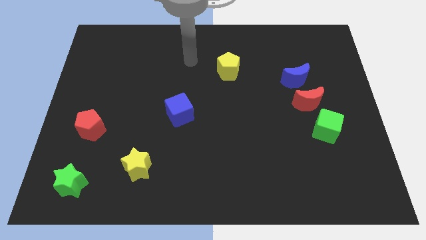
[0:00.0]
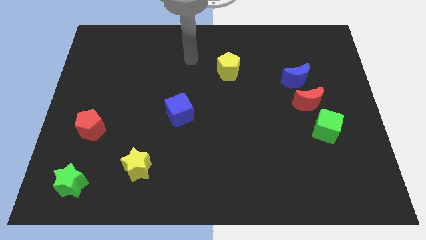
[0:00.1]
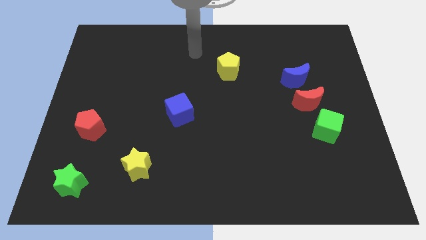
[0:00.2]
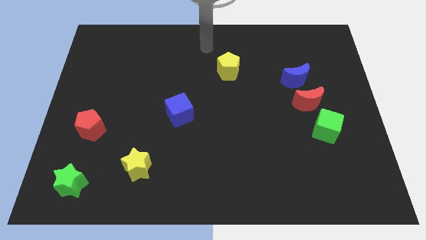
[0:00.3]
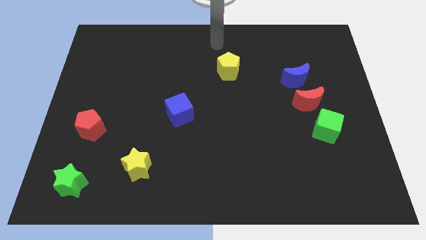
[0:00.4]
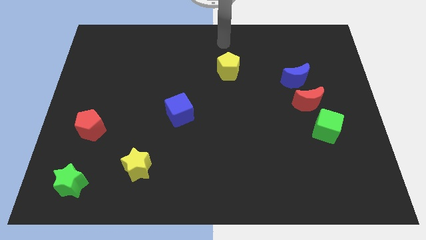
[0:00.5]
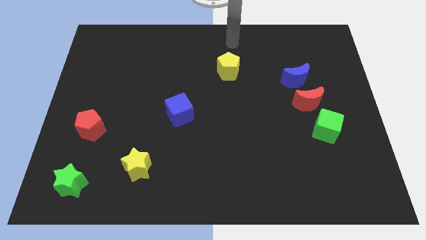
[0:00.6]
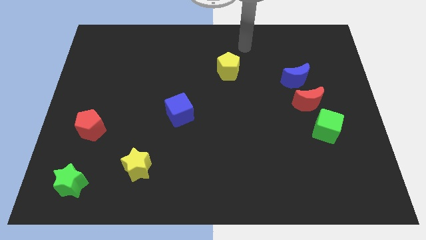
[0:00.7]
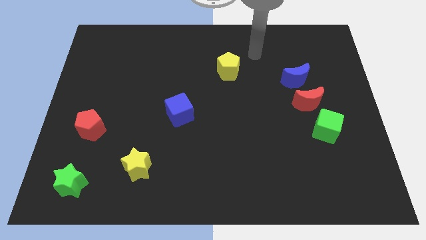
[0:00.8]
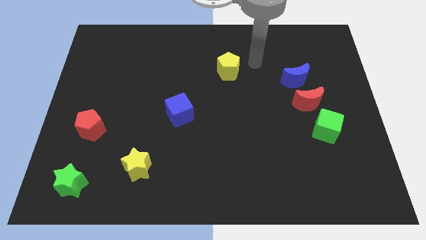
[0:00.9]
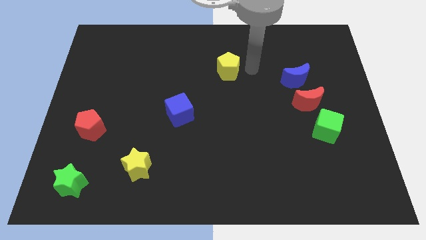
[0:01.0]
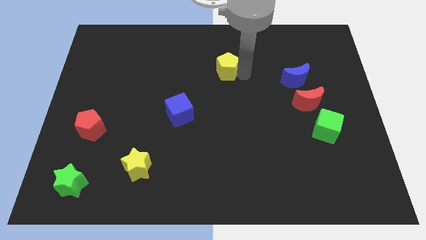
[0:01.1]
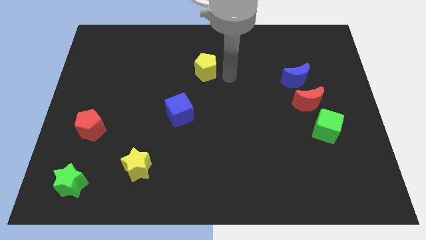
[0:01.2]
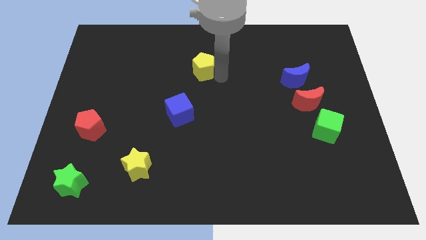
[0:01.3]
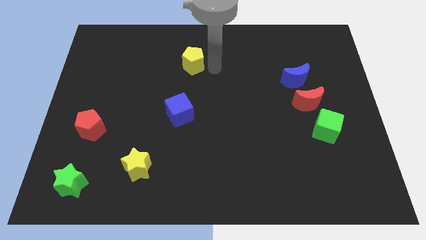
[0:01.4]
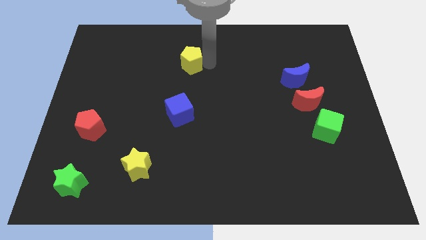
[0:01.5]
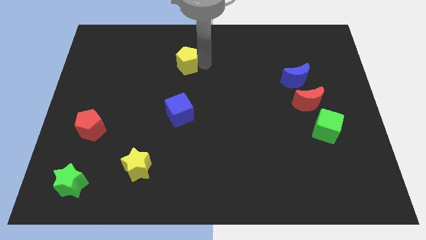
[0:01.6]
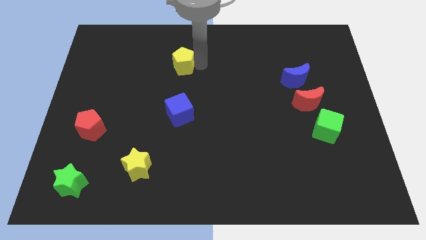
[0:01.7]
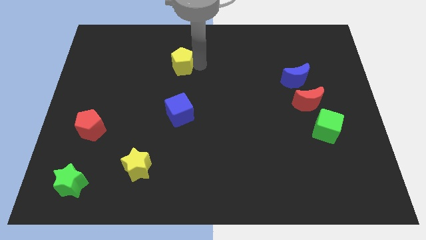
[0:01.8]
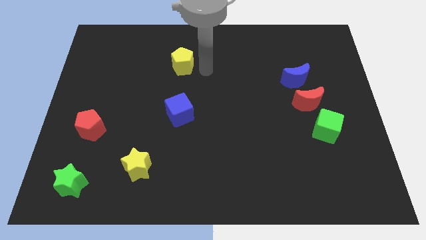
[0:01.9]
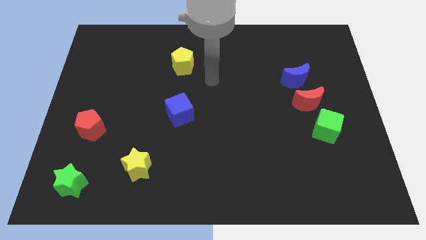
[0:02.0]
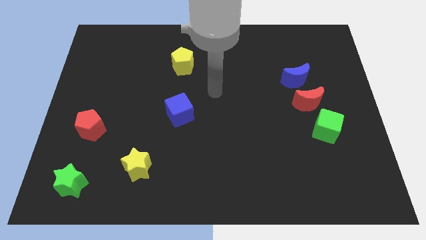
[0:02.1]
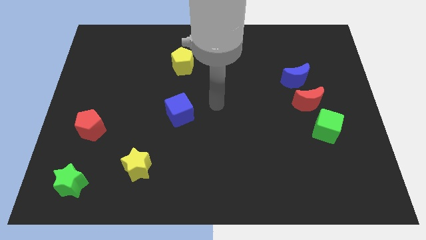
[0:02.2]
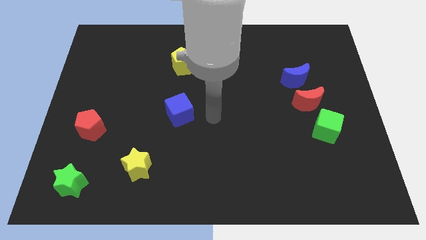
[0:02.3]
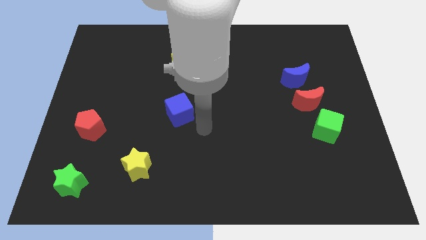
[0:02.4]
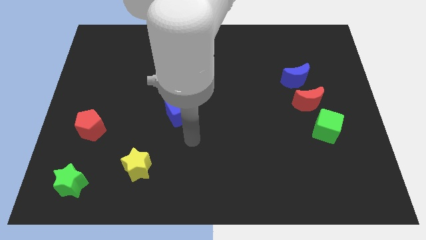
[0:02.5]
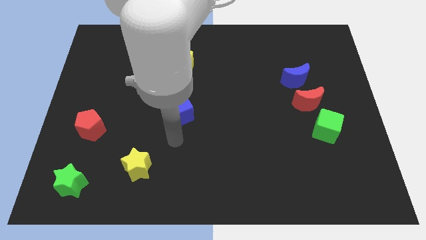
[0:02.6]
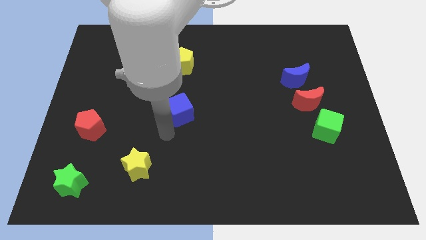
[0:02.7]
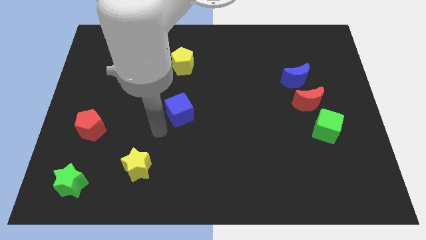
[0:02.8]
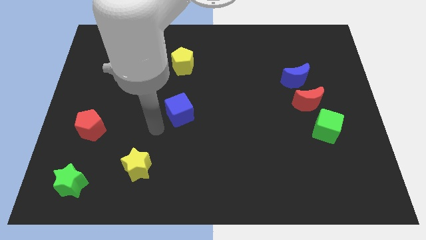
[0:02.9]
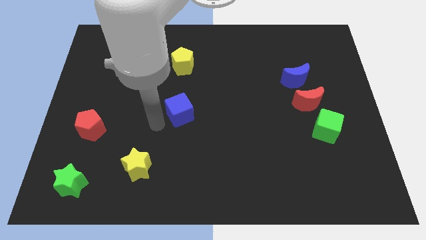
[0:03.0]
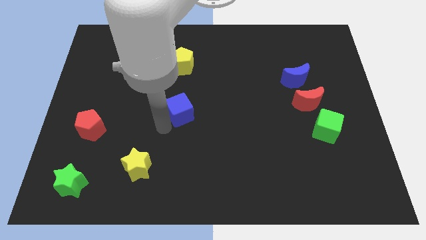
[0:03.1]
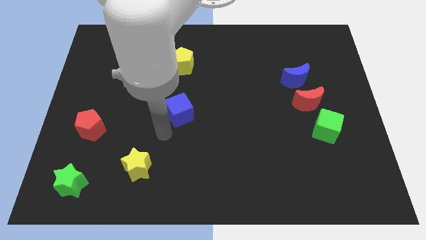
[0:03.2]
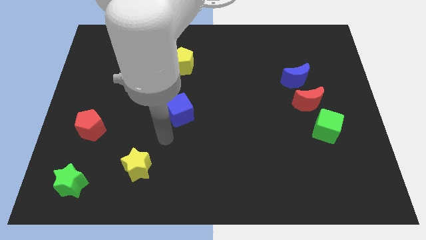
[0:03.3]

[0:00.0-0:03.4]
put the yellow pentagon above the blue cube

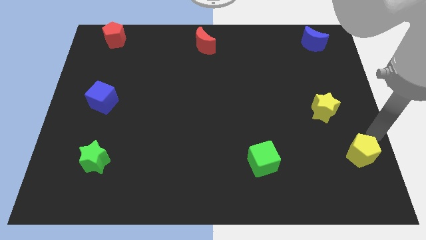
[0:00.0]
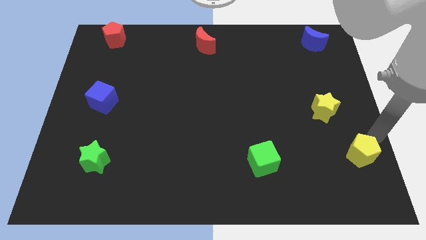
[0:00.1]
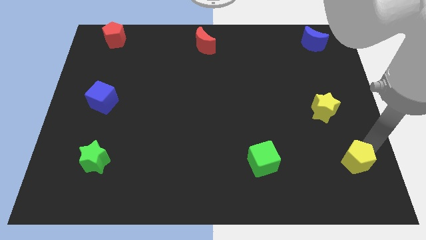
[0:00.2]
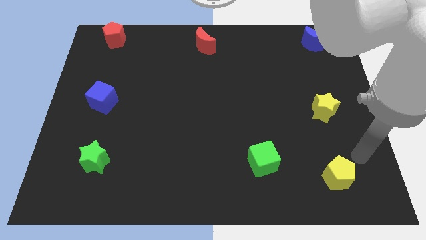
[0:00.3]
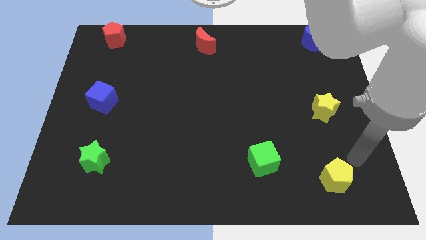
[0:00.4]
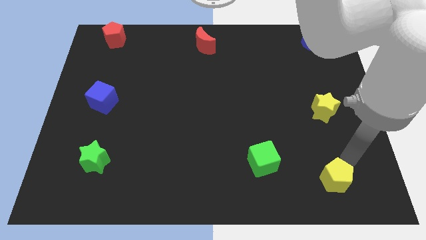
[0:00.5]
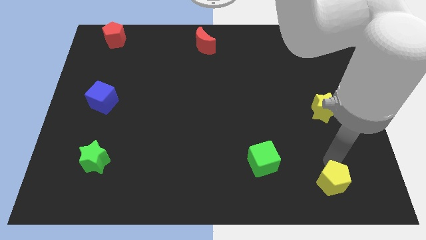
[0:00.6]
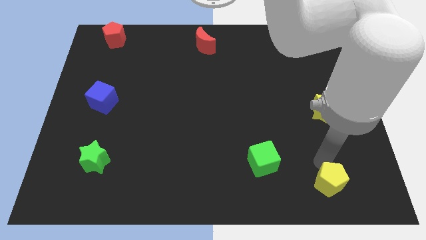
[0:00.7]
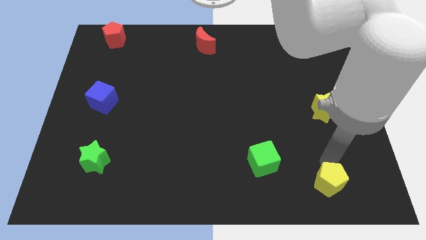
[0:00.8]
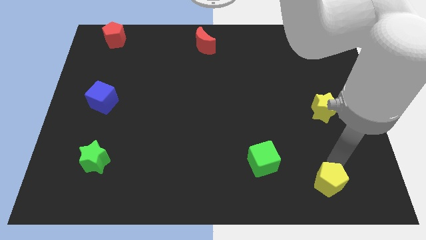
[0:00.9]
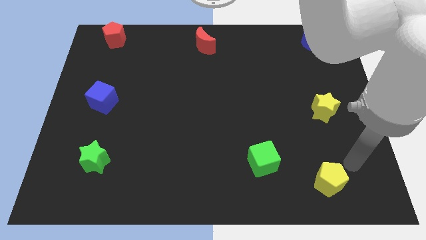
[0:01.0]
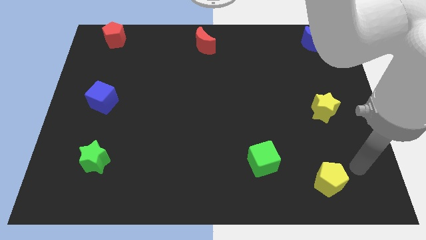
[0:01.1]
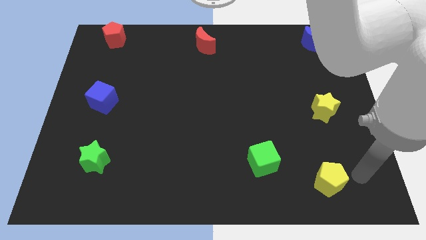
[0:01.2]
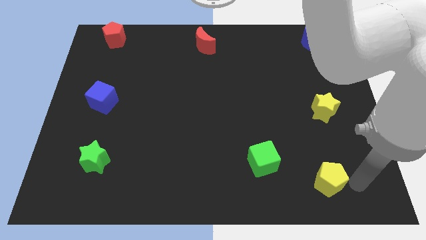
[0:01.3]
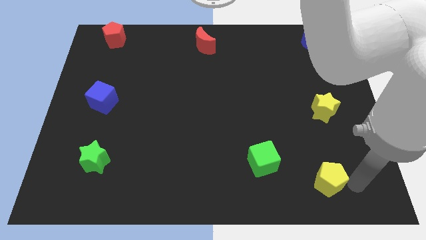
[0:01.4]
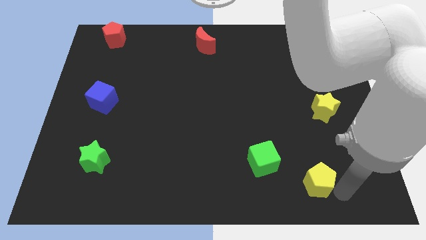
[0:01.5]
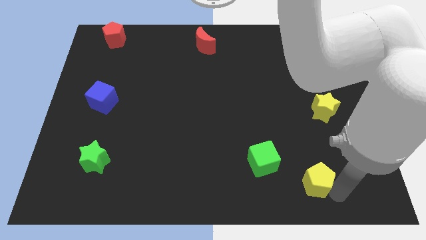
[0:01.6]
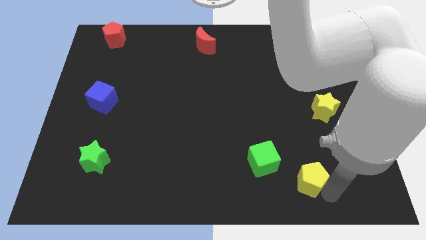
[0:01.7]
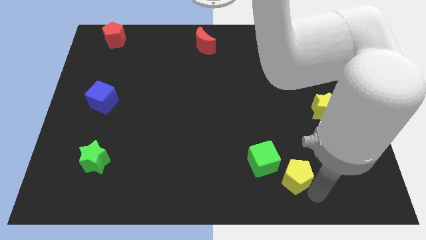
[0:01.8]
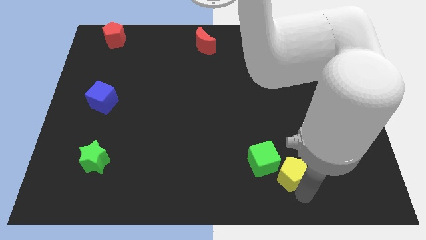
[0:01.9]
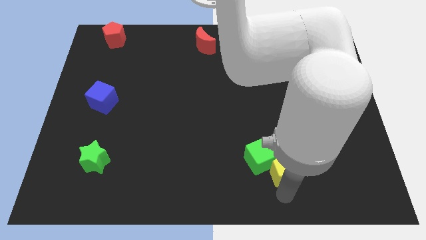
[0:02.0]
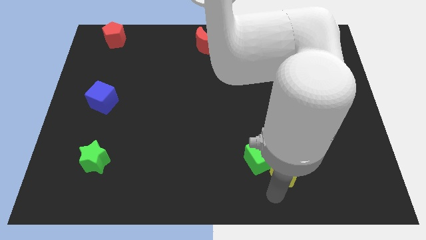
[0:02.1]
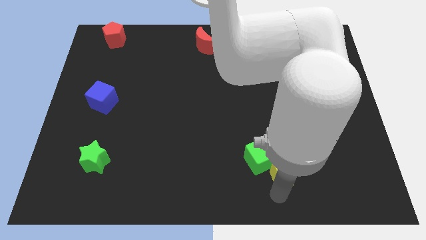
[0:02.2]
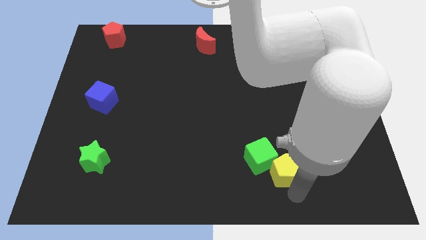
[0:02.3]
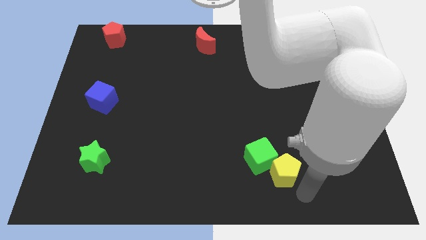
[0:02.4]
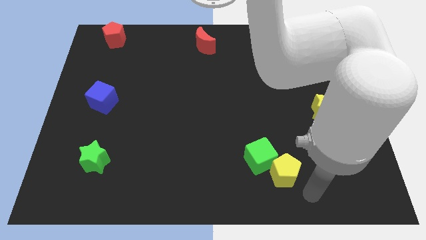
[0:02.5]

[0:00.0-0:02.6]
push the yellow pentagon into the green cube

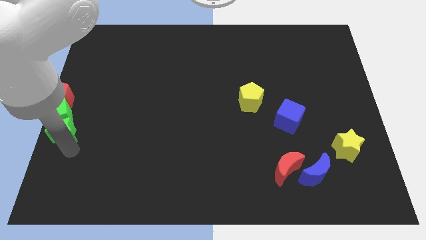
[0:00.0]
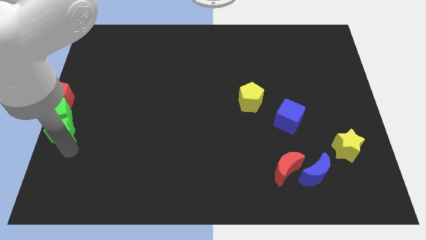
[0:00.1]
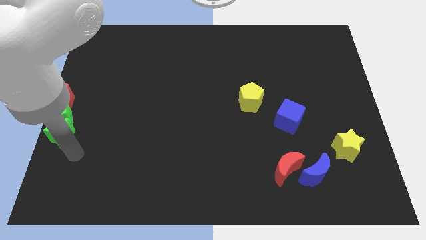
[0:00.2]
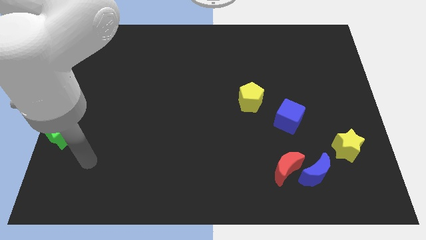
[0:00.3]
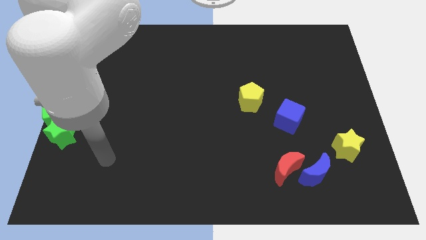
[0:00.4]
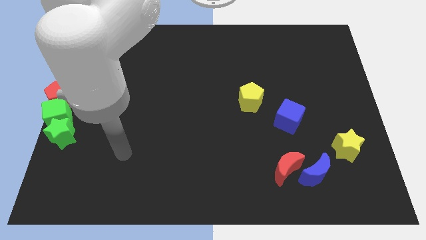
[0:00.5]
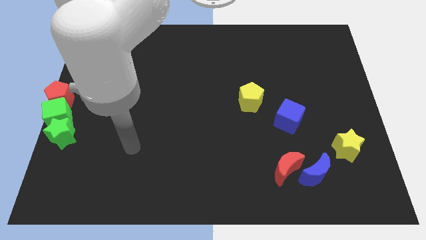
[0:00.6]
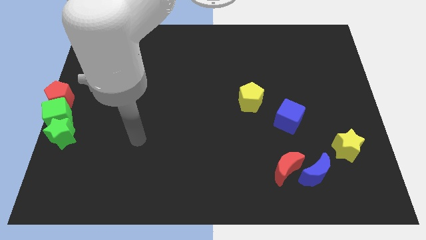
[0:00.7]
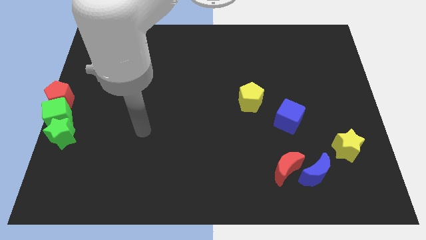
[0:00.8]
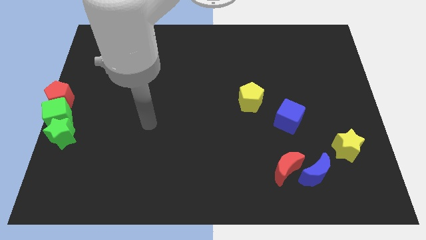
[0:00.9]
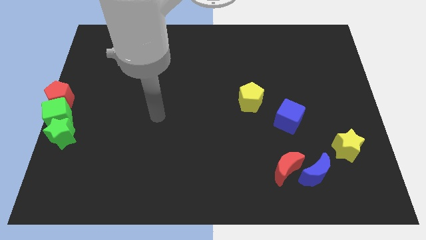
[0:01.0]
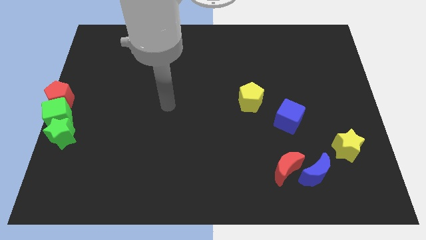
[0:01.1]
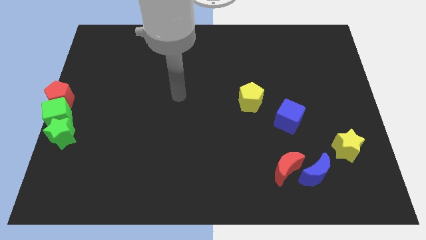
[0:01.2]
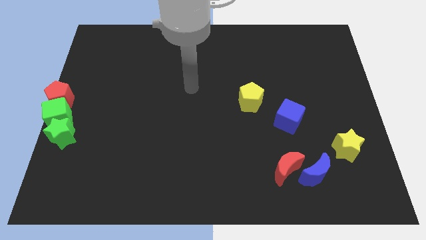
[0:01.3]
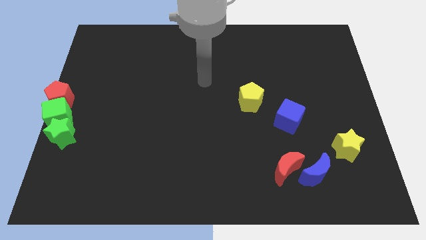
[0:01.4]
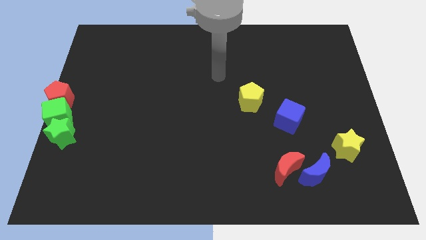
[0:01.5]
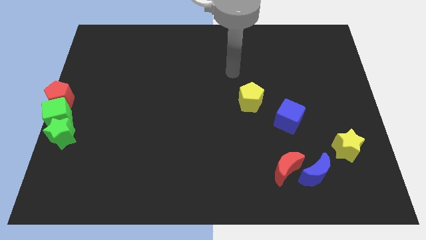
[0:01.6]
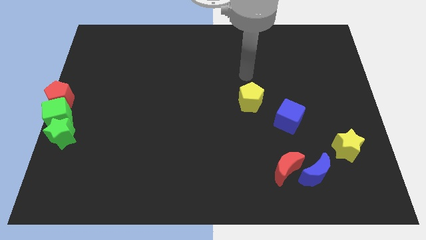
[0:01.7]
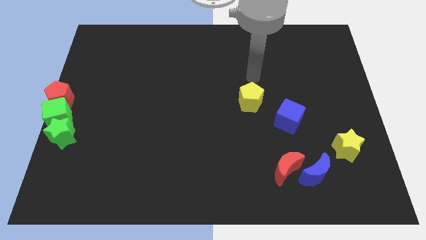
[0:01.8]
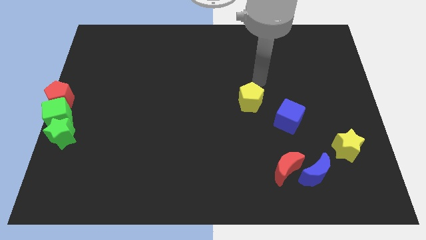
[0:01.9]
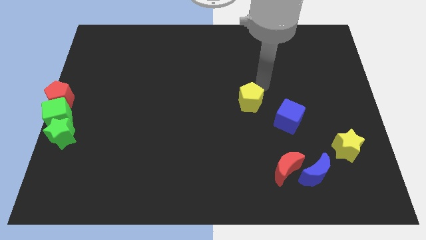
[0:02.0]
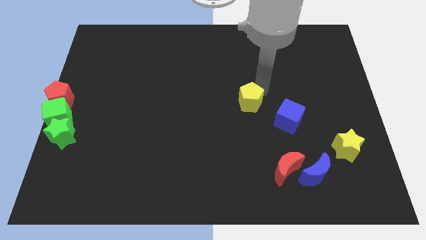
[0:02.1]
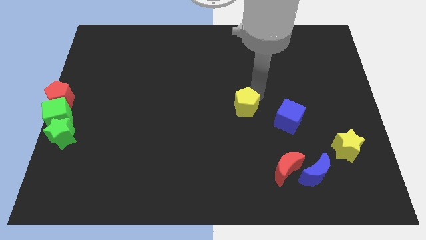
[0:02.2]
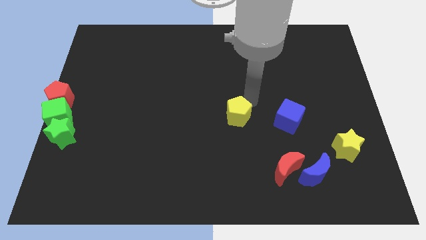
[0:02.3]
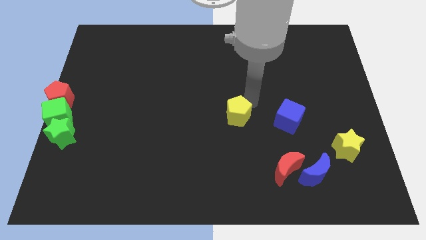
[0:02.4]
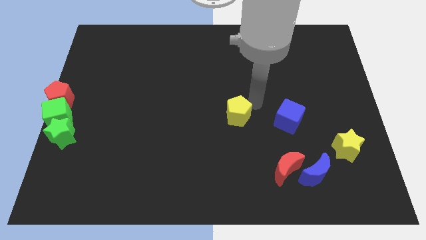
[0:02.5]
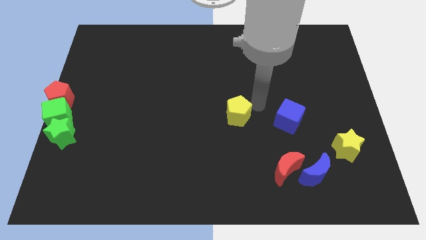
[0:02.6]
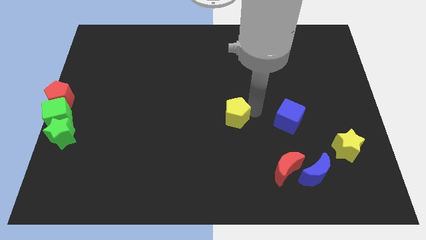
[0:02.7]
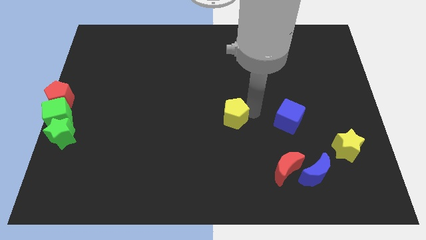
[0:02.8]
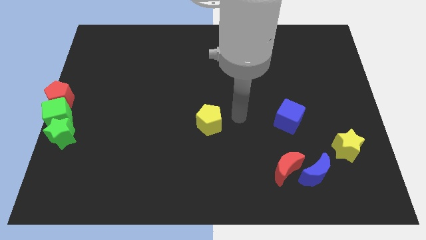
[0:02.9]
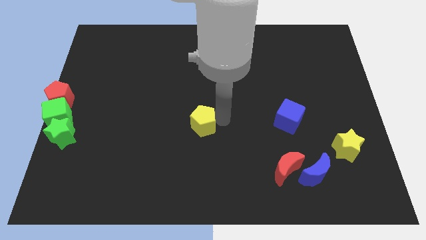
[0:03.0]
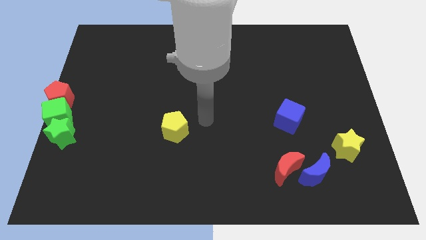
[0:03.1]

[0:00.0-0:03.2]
place yellow pentagon to the center of the board
